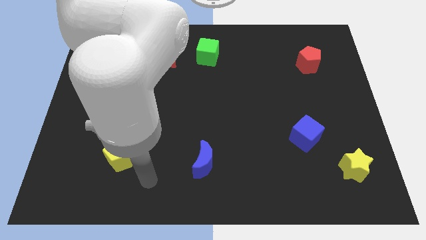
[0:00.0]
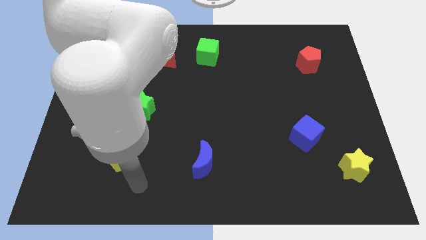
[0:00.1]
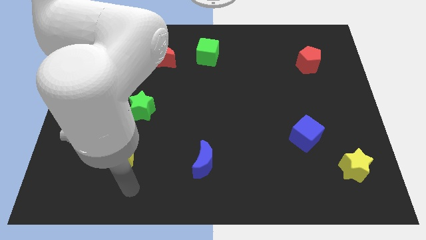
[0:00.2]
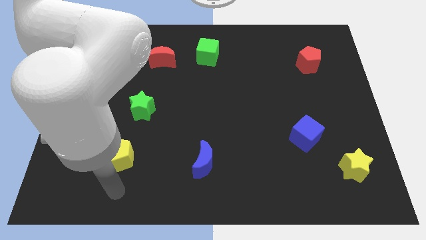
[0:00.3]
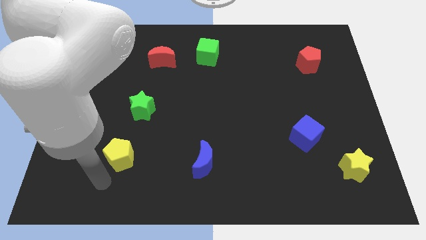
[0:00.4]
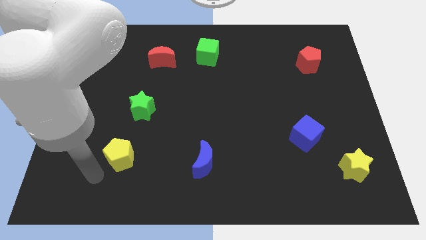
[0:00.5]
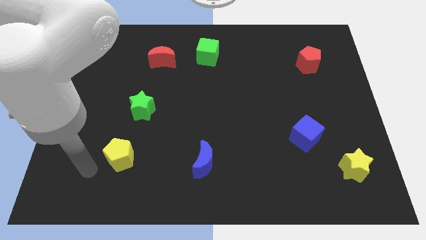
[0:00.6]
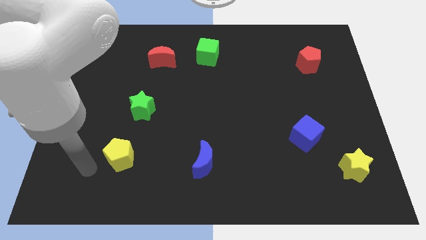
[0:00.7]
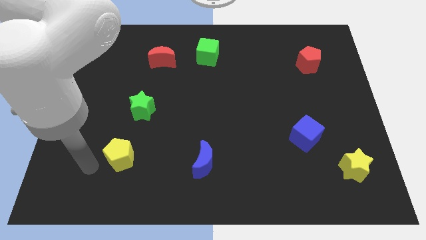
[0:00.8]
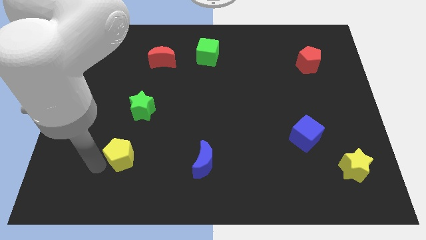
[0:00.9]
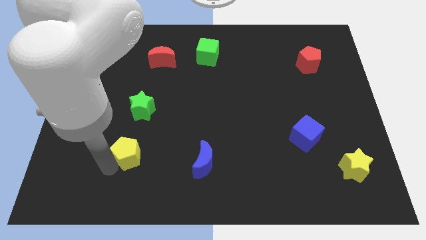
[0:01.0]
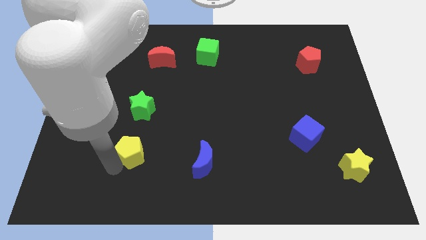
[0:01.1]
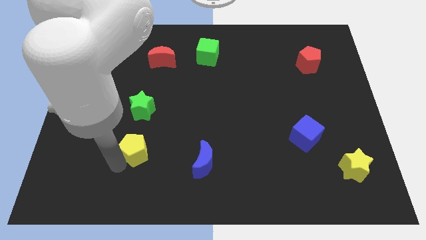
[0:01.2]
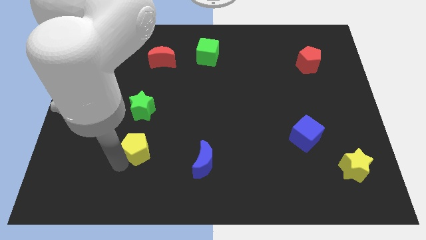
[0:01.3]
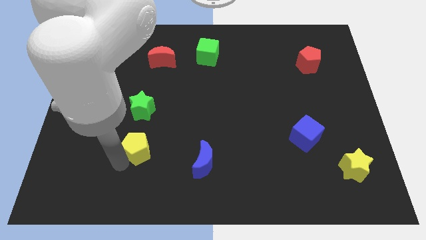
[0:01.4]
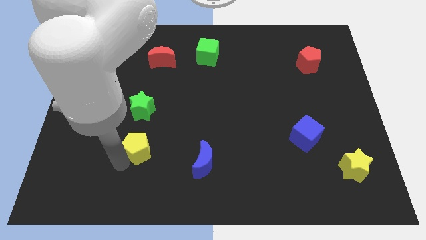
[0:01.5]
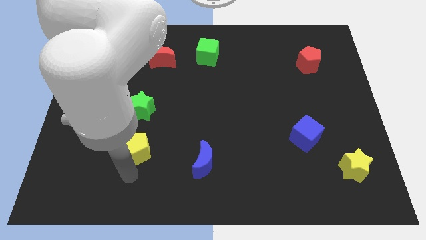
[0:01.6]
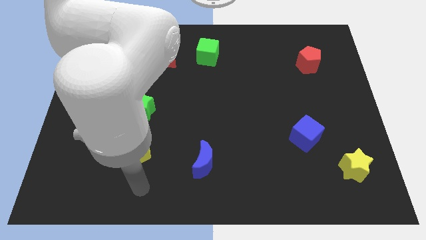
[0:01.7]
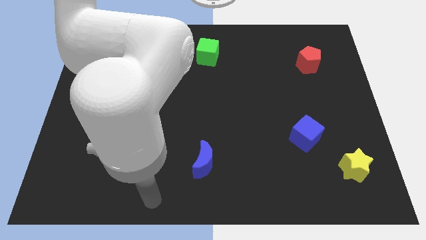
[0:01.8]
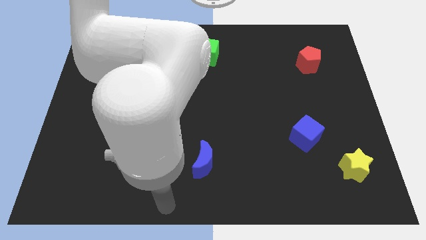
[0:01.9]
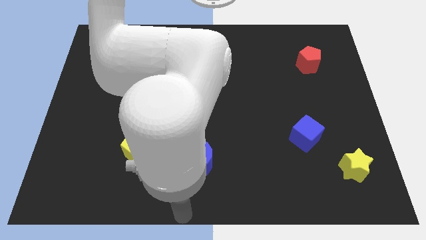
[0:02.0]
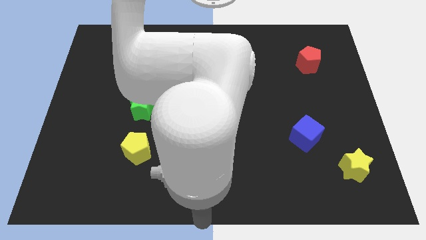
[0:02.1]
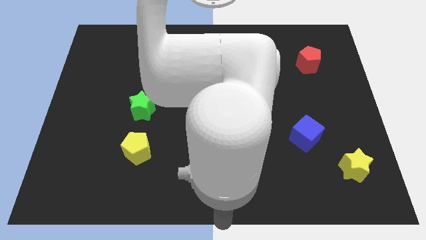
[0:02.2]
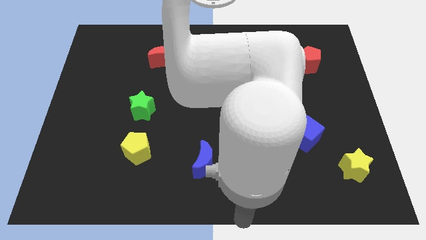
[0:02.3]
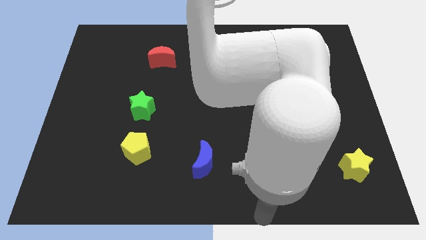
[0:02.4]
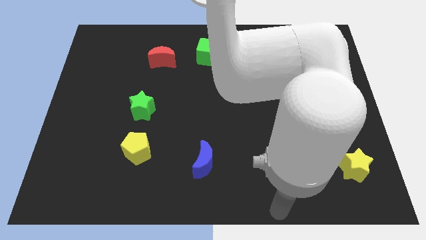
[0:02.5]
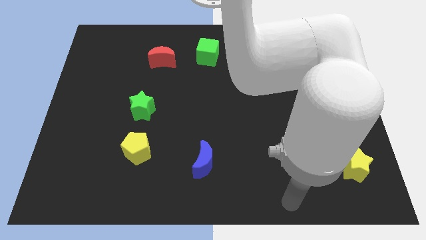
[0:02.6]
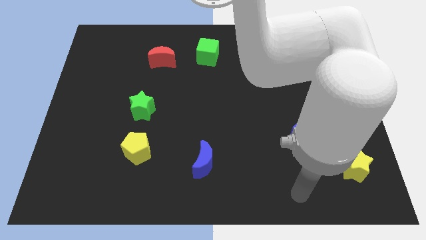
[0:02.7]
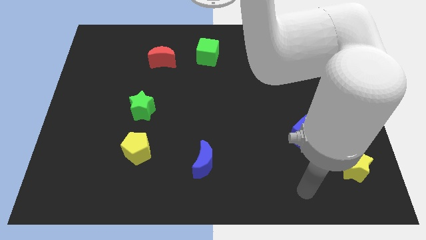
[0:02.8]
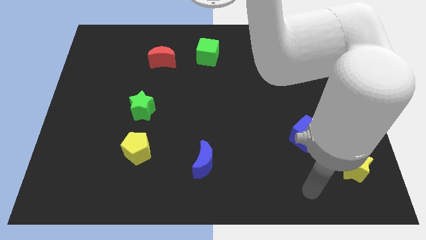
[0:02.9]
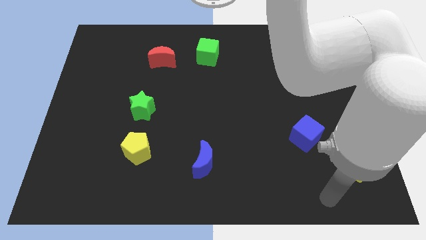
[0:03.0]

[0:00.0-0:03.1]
adjust the yellow pentagon vertically below the green star and go away

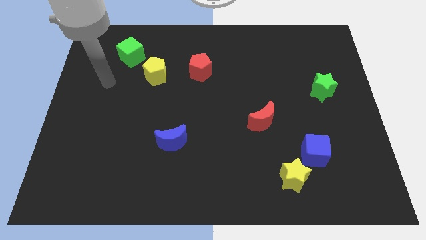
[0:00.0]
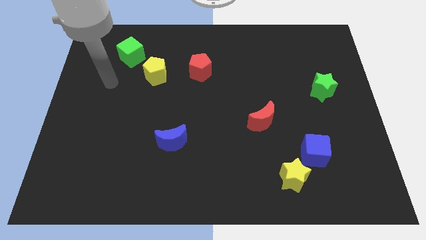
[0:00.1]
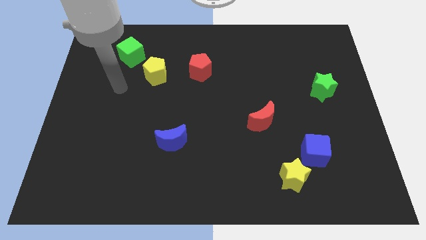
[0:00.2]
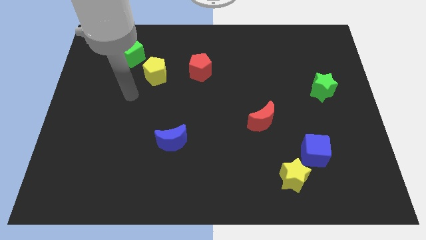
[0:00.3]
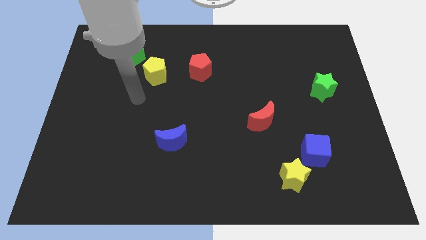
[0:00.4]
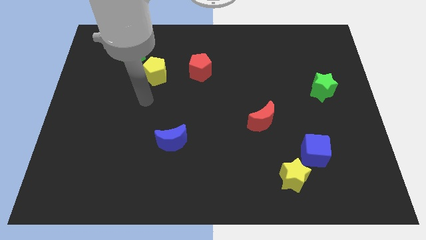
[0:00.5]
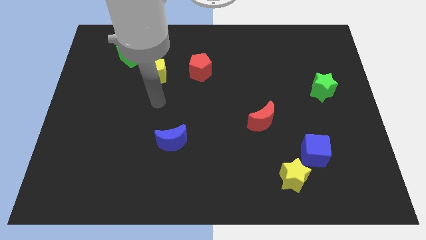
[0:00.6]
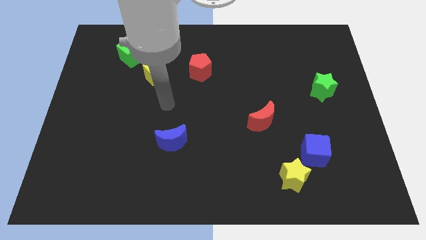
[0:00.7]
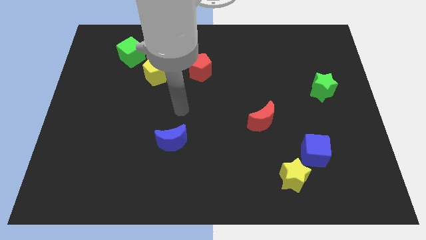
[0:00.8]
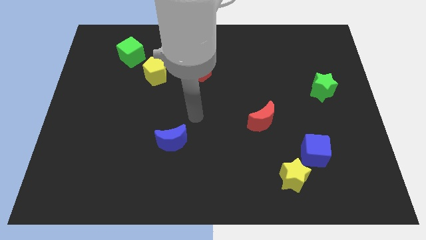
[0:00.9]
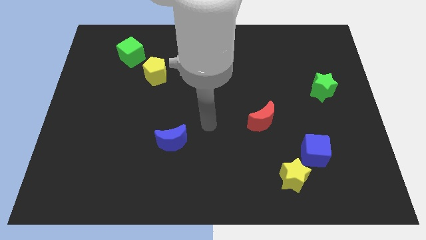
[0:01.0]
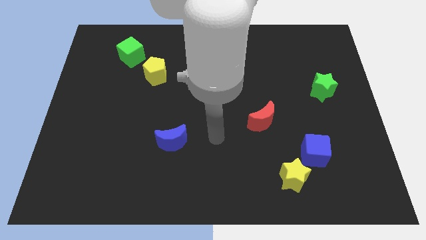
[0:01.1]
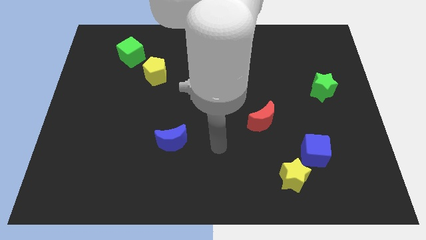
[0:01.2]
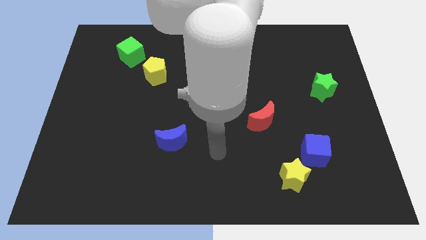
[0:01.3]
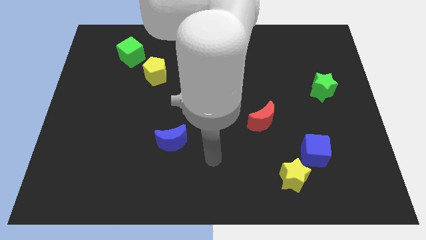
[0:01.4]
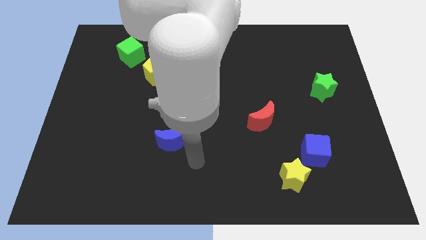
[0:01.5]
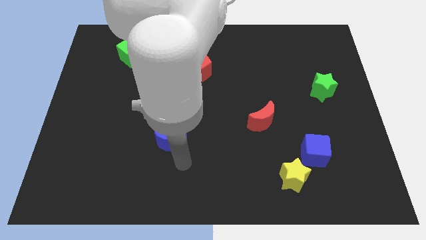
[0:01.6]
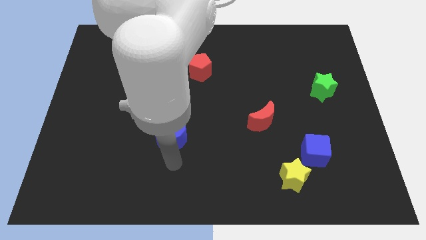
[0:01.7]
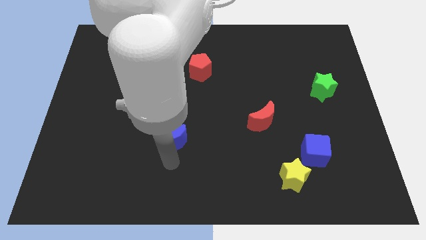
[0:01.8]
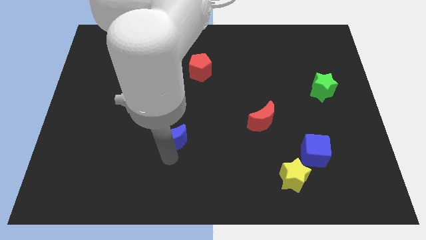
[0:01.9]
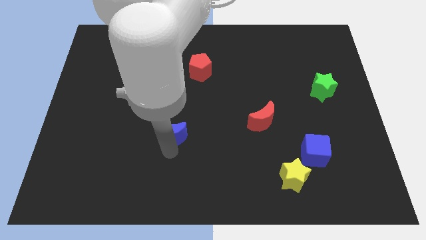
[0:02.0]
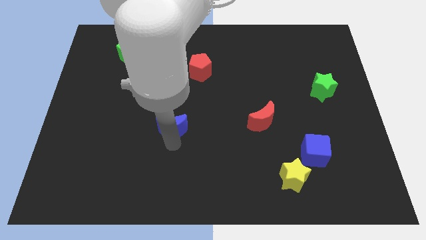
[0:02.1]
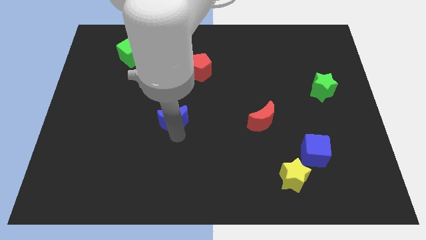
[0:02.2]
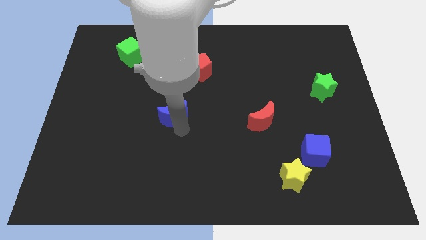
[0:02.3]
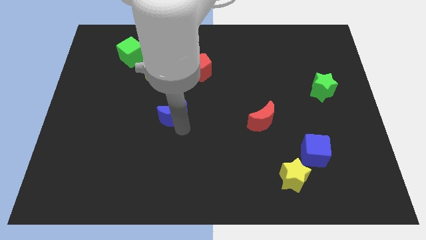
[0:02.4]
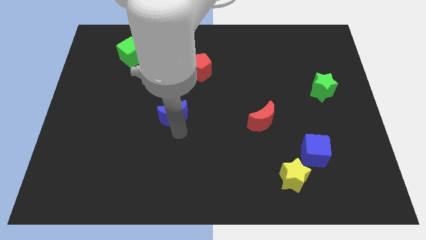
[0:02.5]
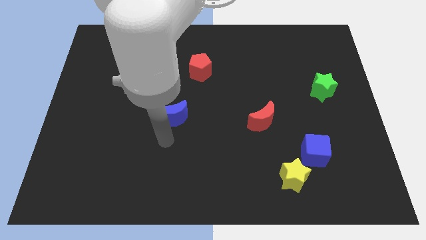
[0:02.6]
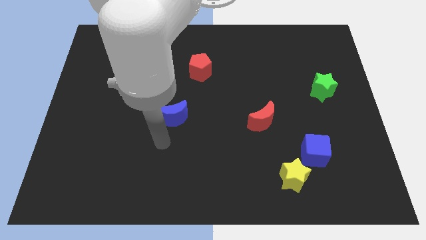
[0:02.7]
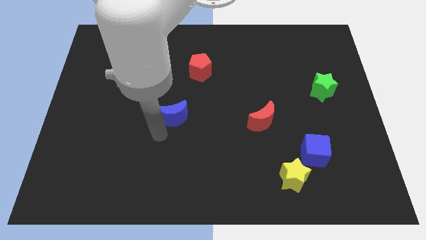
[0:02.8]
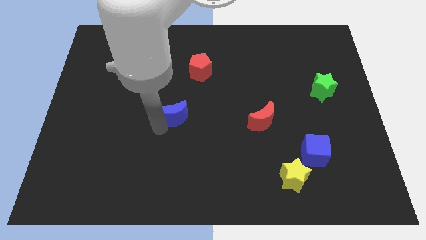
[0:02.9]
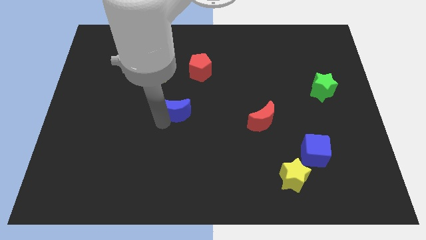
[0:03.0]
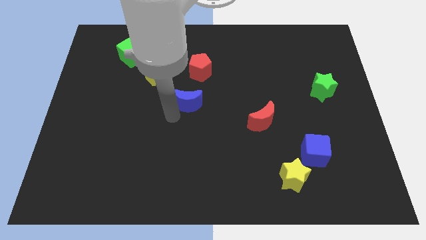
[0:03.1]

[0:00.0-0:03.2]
slide the blue crescent to the center of the board

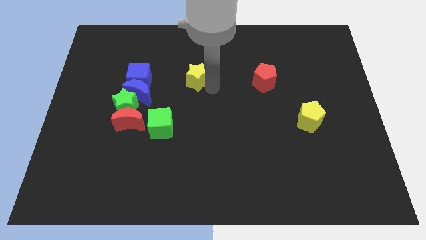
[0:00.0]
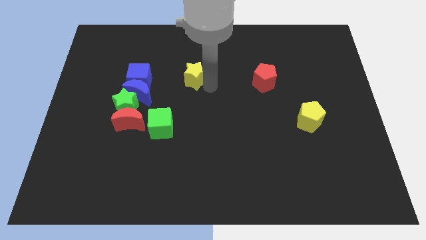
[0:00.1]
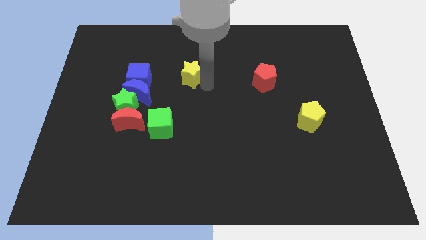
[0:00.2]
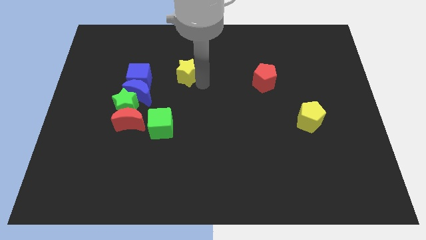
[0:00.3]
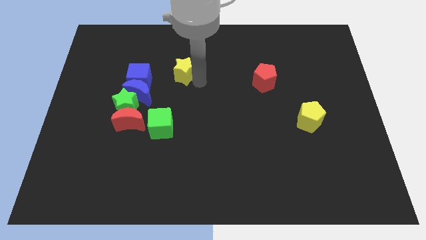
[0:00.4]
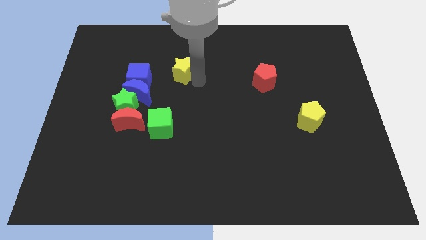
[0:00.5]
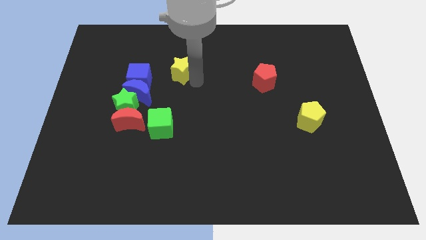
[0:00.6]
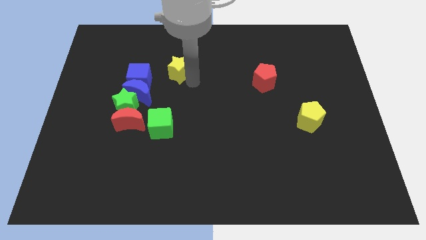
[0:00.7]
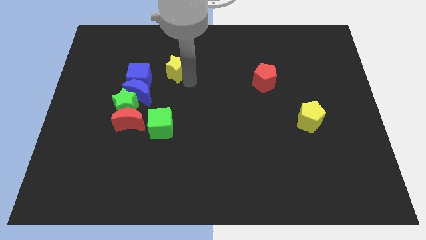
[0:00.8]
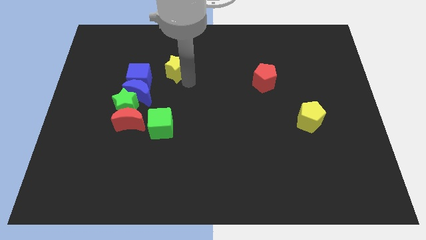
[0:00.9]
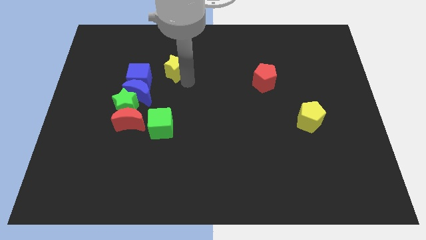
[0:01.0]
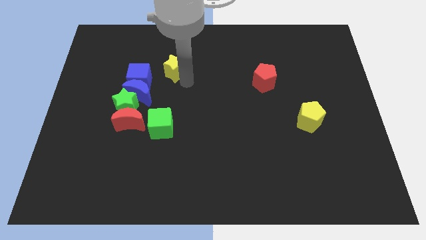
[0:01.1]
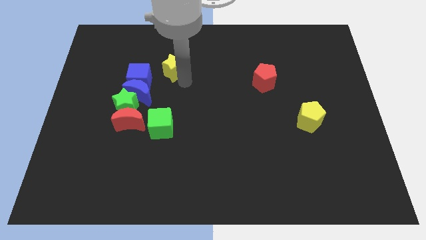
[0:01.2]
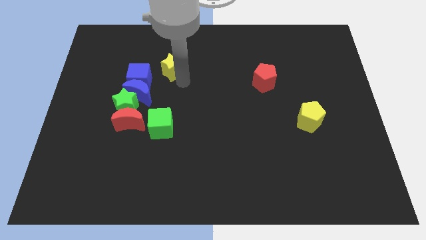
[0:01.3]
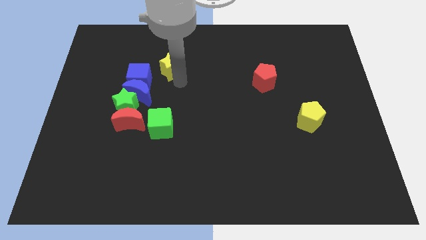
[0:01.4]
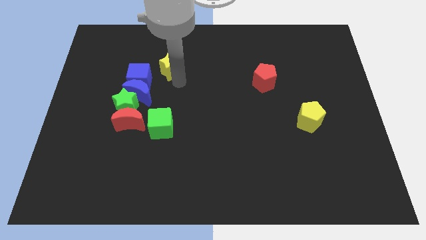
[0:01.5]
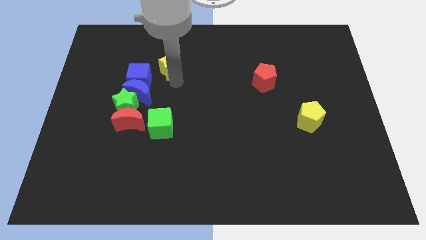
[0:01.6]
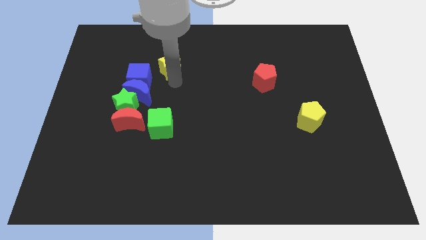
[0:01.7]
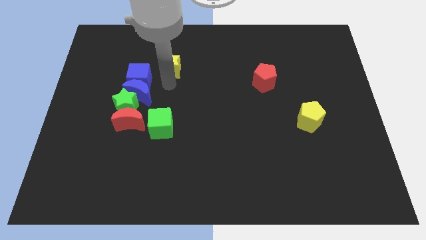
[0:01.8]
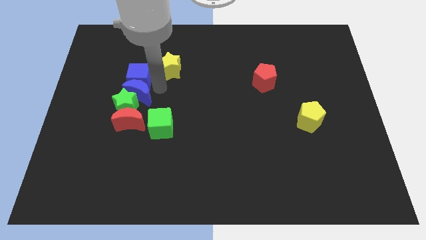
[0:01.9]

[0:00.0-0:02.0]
place yellow star right to blue cube

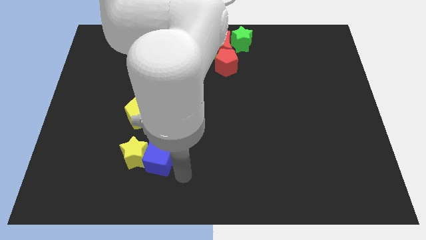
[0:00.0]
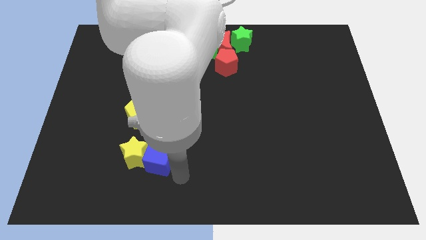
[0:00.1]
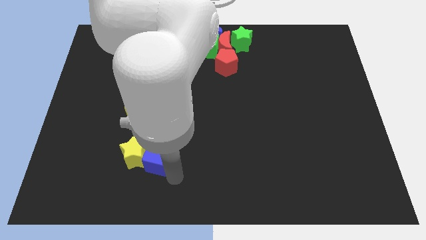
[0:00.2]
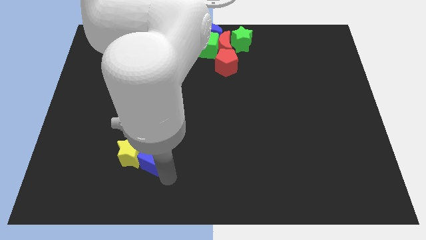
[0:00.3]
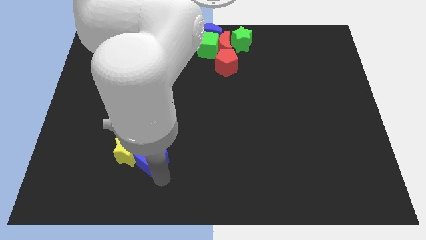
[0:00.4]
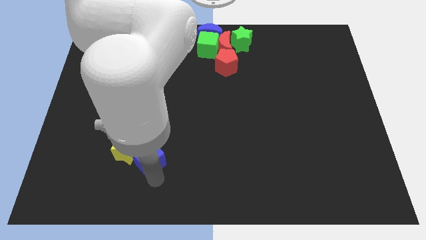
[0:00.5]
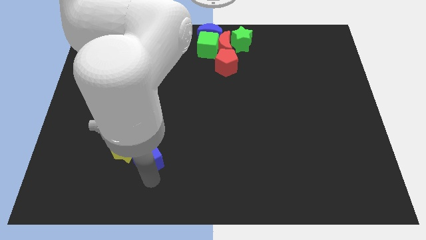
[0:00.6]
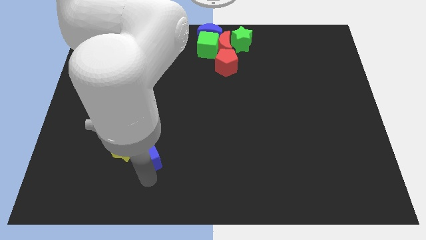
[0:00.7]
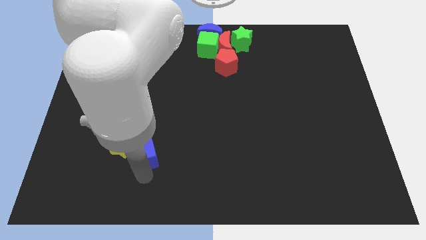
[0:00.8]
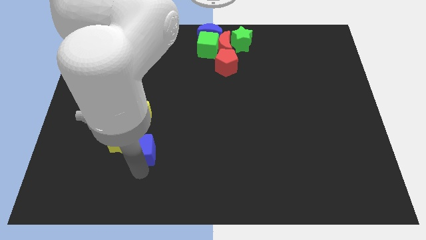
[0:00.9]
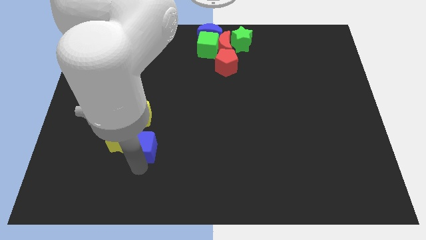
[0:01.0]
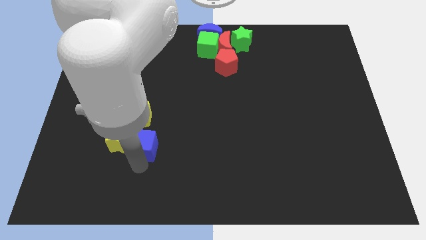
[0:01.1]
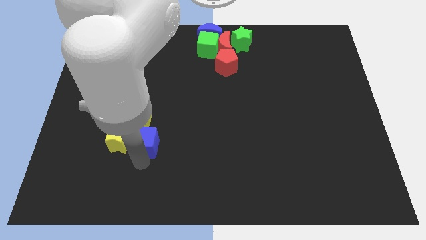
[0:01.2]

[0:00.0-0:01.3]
move the blue cube to the right of the yellow star
